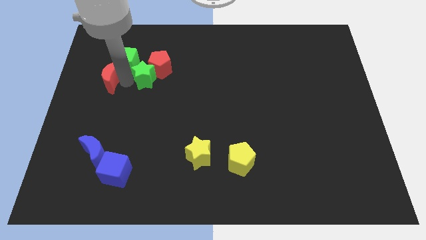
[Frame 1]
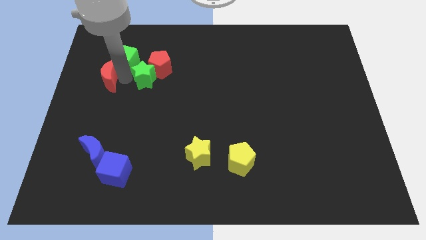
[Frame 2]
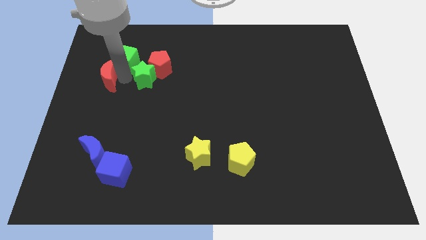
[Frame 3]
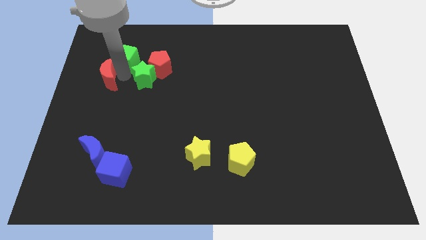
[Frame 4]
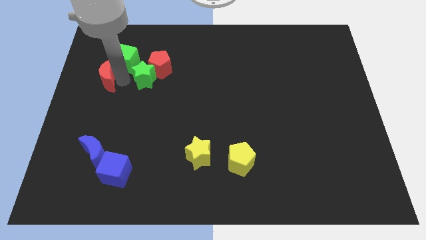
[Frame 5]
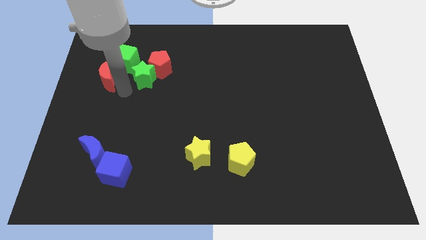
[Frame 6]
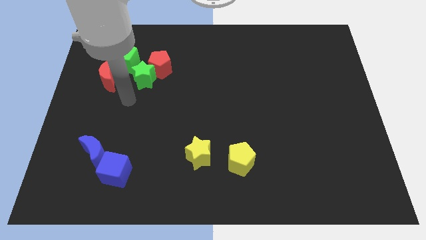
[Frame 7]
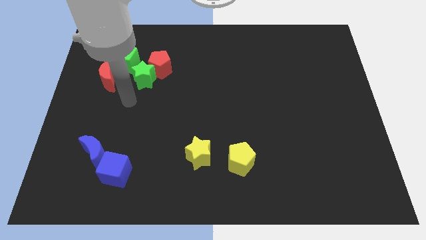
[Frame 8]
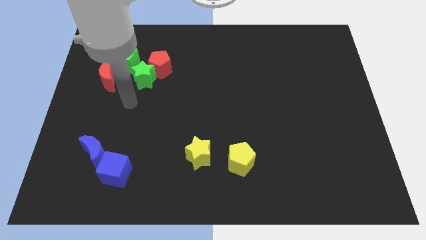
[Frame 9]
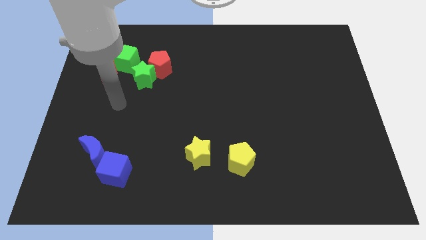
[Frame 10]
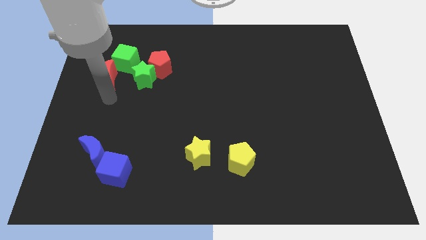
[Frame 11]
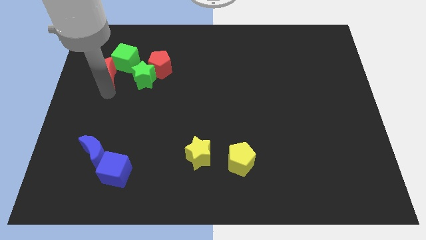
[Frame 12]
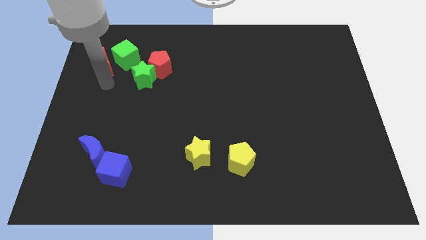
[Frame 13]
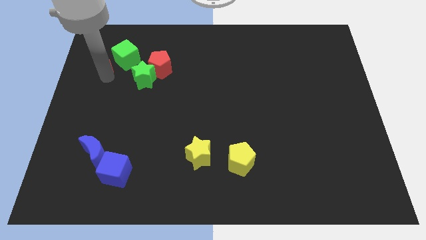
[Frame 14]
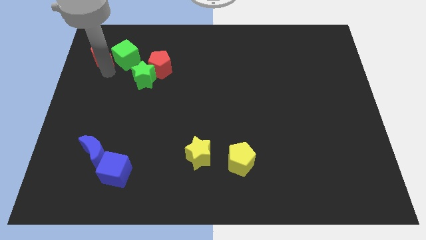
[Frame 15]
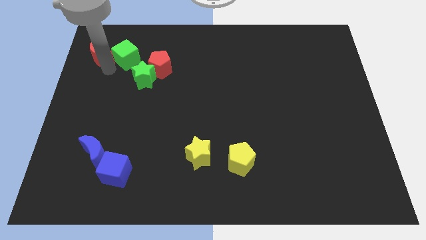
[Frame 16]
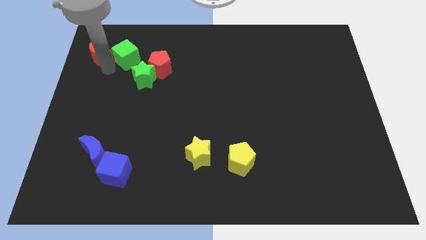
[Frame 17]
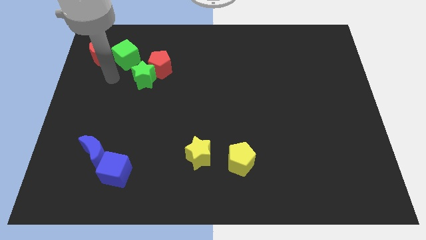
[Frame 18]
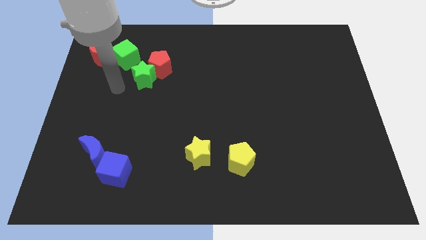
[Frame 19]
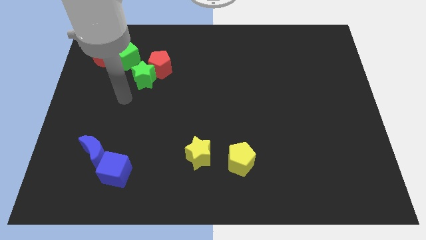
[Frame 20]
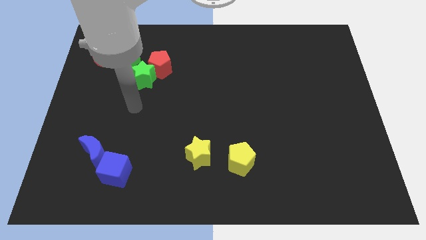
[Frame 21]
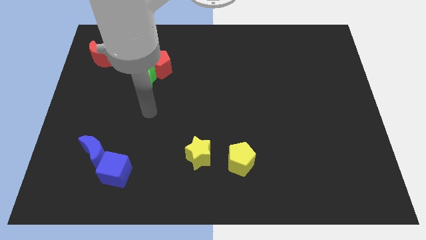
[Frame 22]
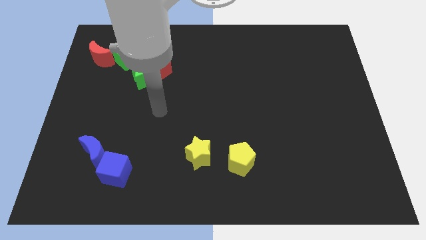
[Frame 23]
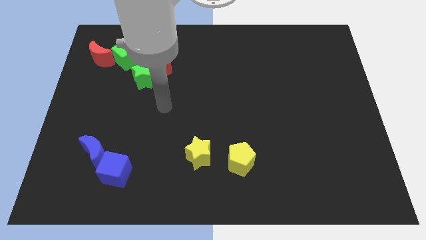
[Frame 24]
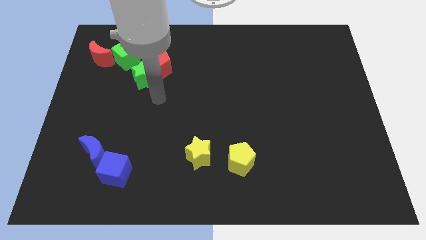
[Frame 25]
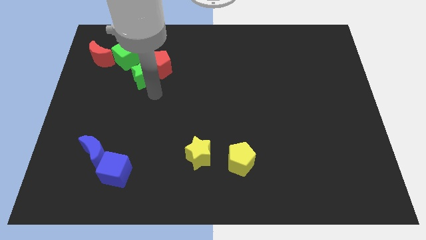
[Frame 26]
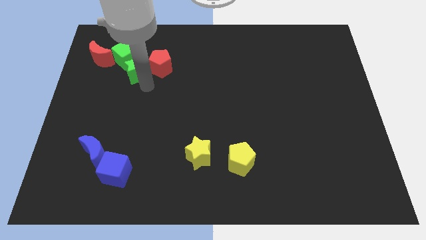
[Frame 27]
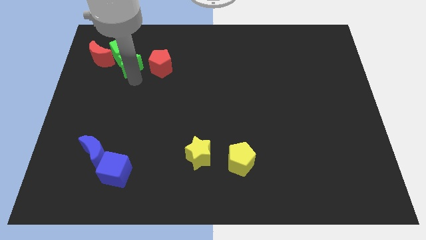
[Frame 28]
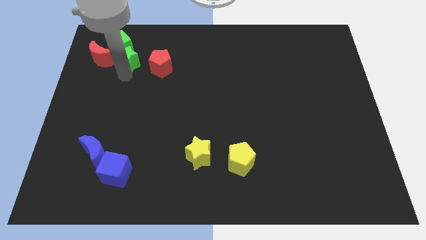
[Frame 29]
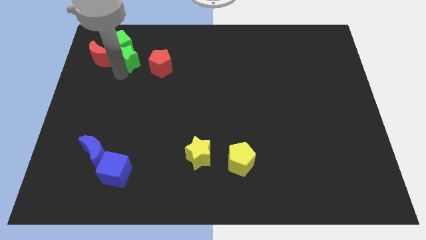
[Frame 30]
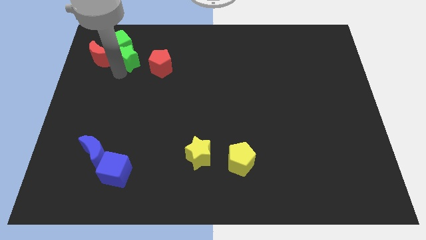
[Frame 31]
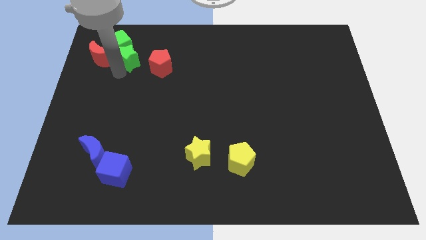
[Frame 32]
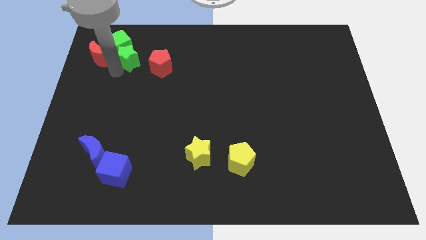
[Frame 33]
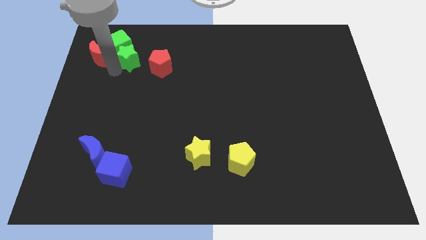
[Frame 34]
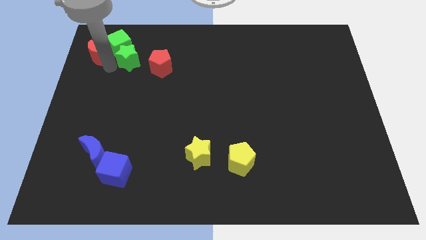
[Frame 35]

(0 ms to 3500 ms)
move the red moon and group of green blocks towards the top left corner of the board

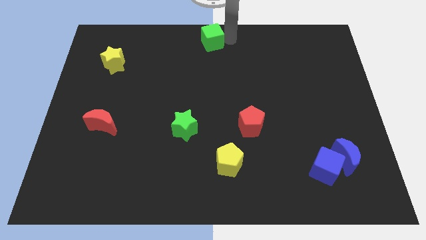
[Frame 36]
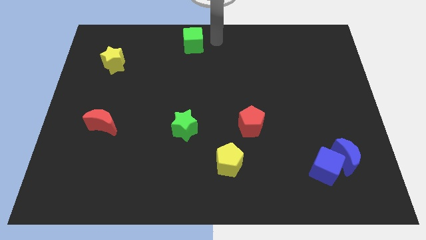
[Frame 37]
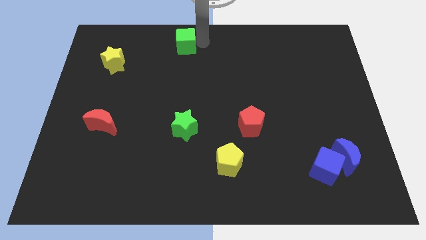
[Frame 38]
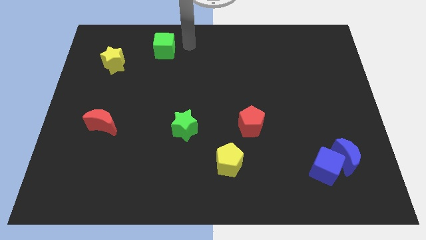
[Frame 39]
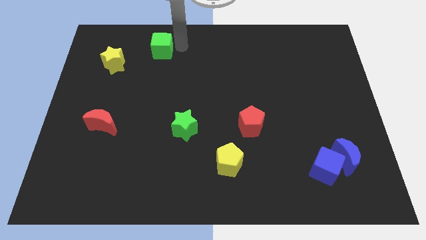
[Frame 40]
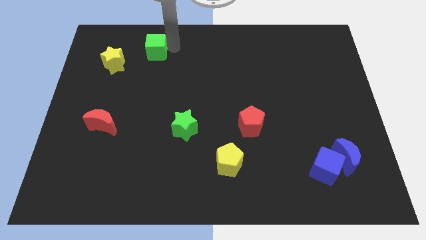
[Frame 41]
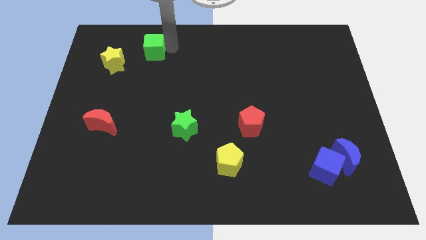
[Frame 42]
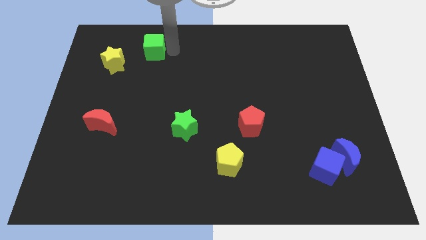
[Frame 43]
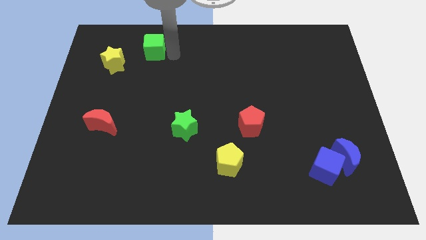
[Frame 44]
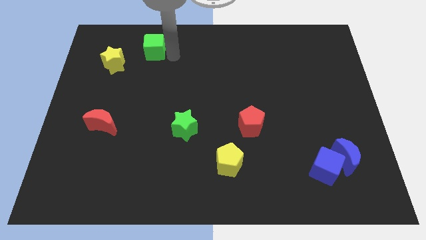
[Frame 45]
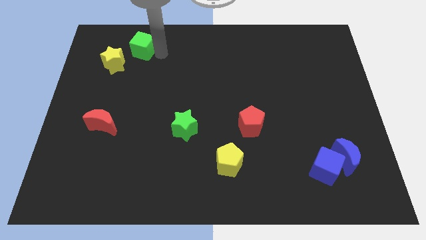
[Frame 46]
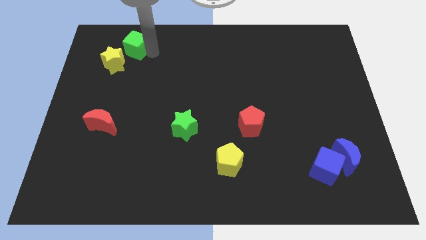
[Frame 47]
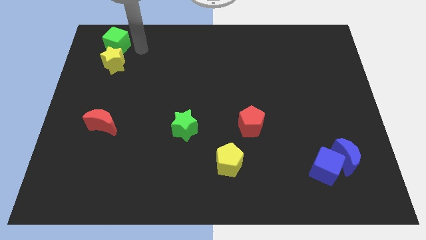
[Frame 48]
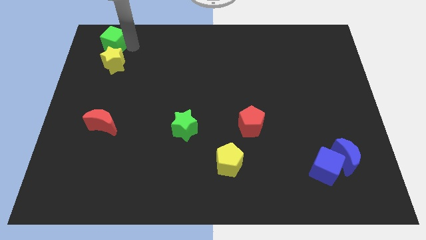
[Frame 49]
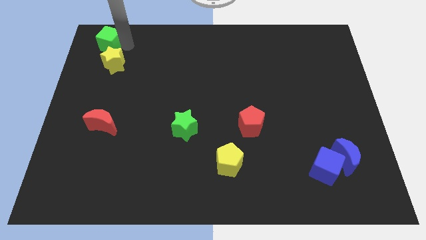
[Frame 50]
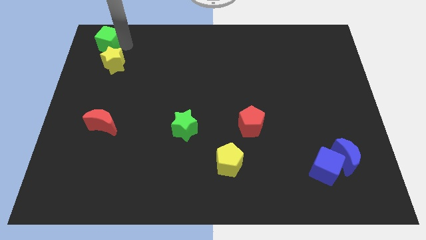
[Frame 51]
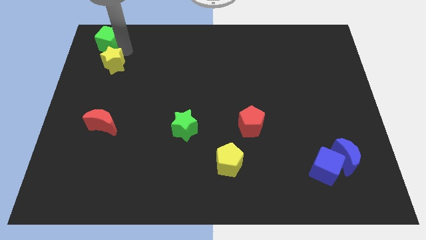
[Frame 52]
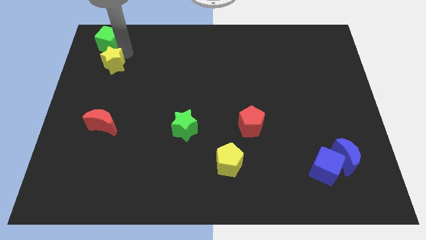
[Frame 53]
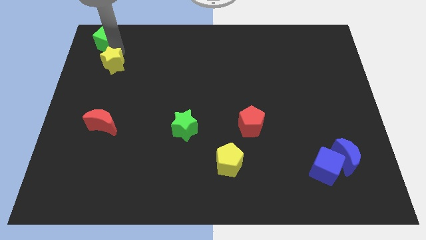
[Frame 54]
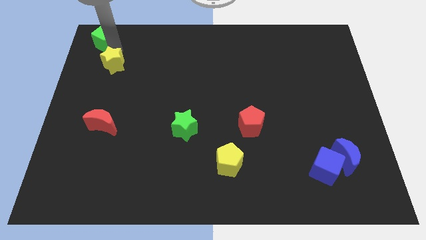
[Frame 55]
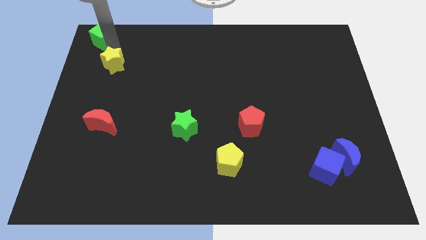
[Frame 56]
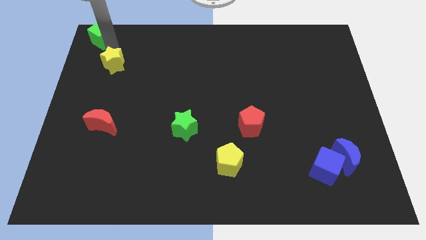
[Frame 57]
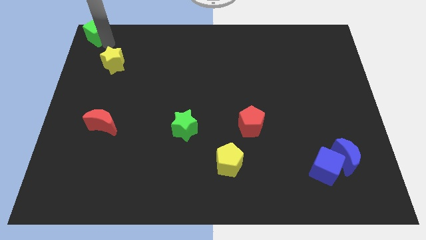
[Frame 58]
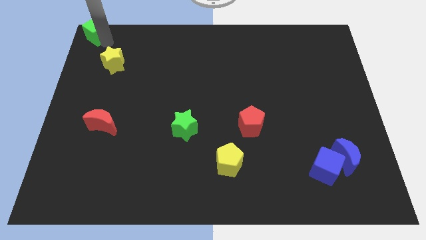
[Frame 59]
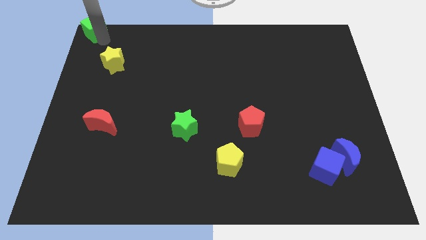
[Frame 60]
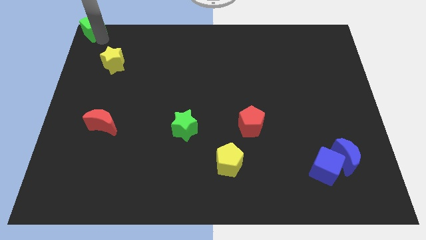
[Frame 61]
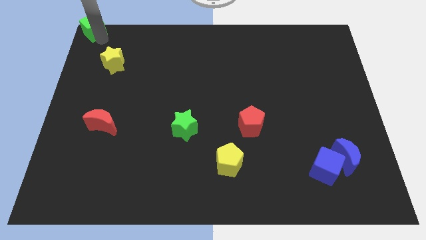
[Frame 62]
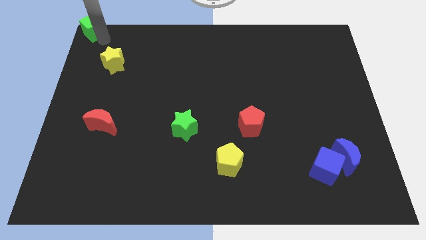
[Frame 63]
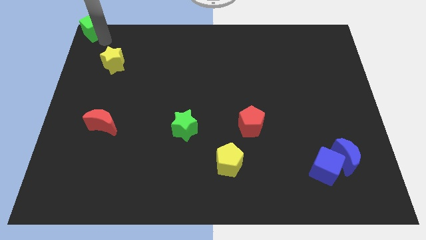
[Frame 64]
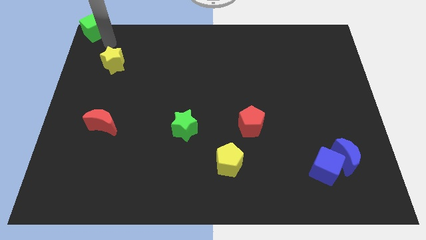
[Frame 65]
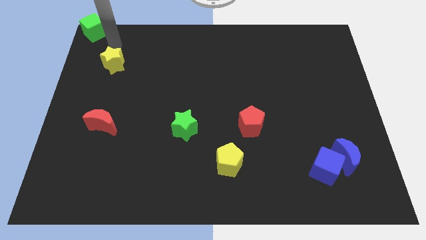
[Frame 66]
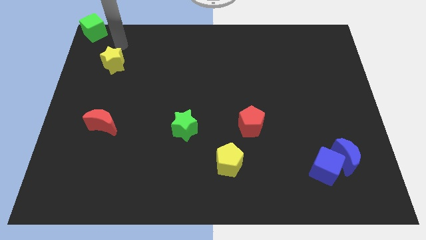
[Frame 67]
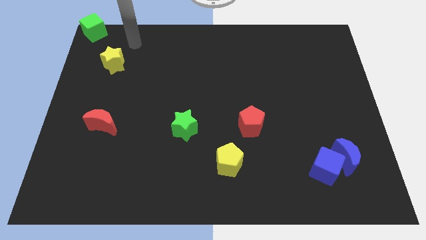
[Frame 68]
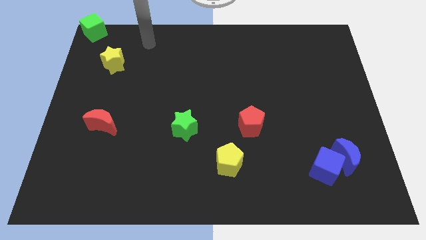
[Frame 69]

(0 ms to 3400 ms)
put the green cube at the top left corner of the board

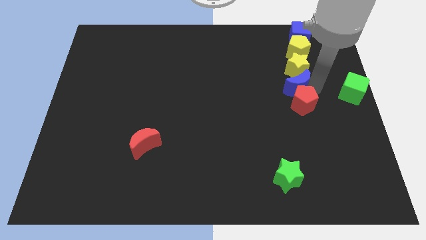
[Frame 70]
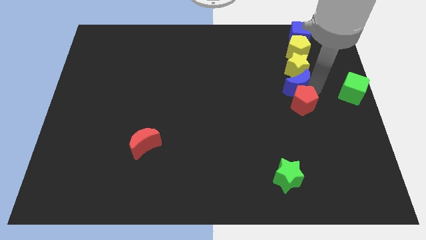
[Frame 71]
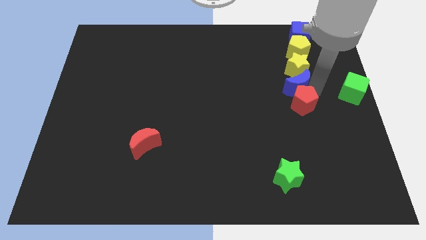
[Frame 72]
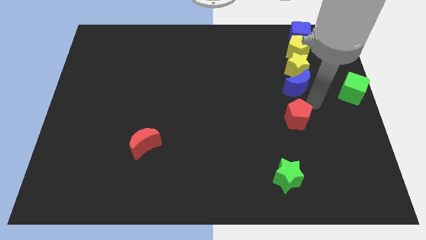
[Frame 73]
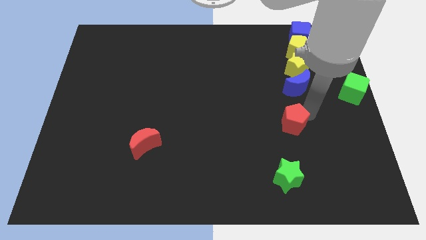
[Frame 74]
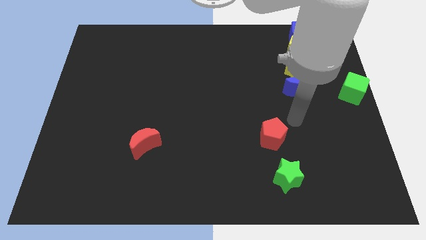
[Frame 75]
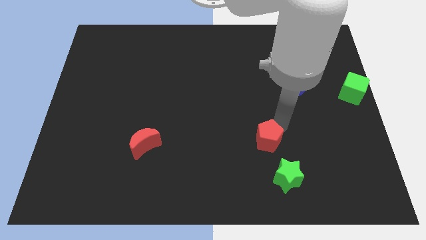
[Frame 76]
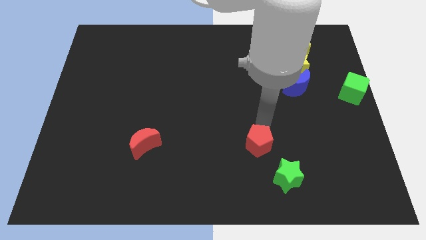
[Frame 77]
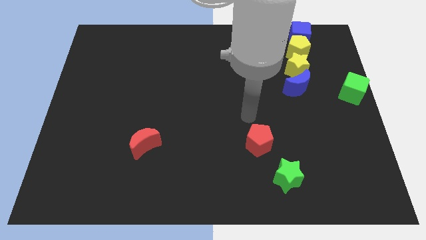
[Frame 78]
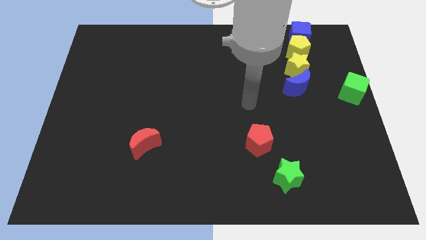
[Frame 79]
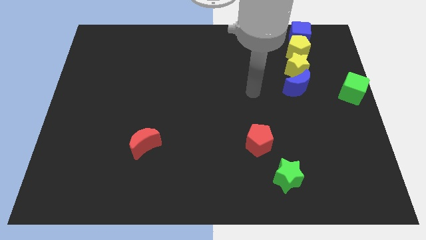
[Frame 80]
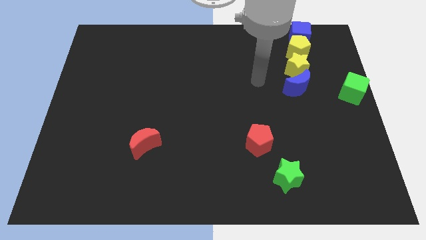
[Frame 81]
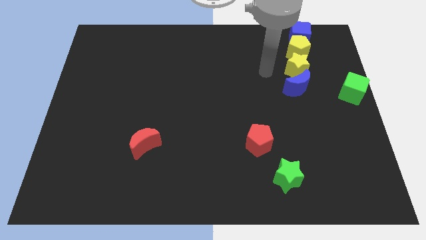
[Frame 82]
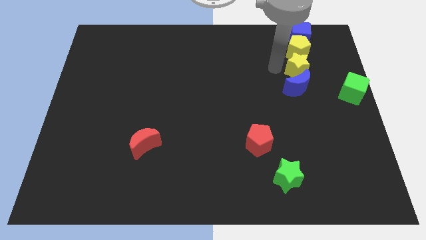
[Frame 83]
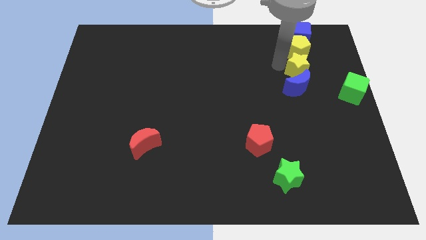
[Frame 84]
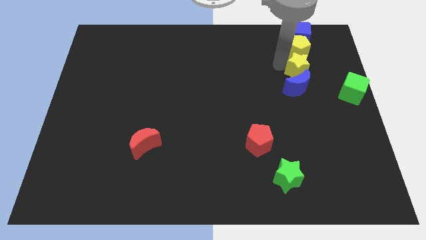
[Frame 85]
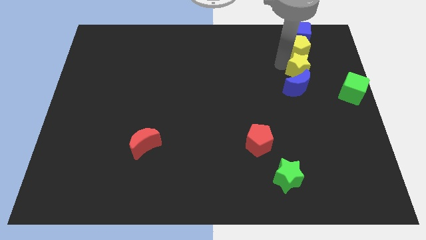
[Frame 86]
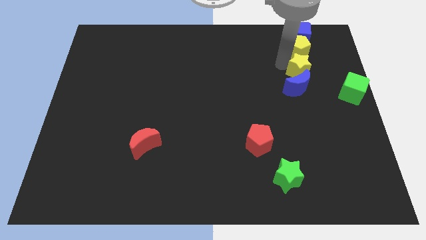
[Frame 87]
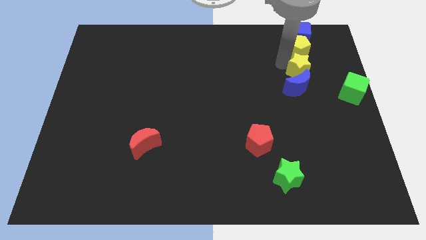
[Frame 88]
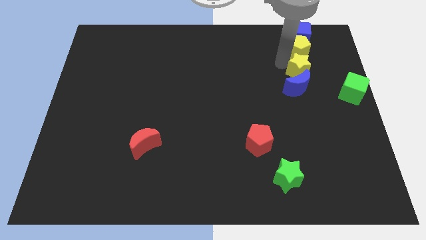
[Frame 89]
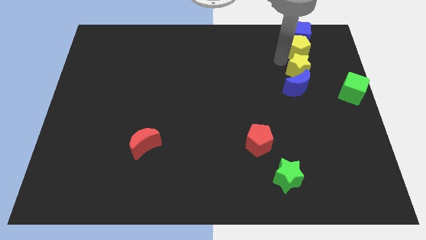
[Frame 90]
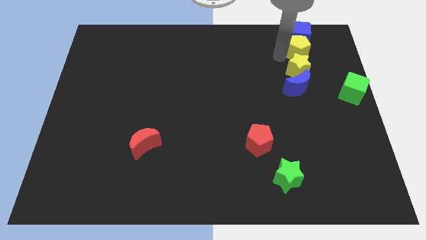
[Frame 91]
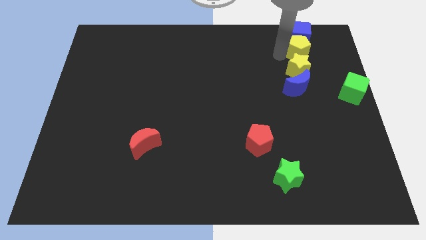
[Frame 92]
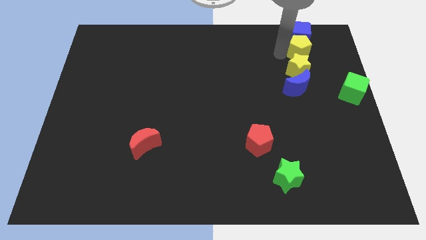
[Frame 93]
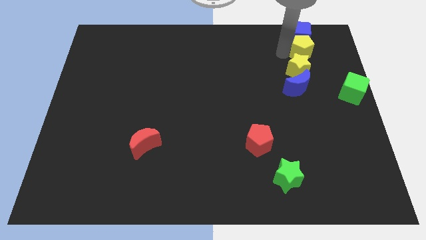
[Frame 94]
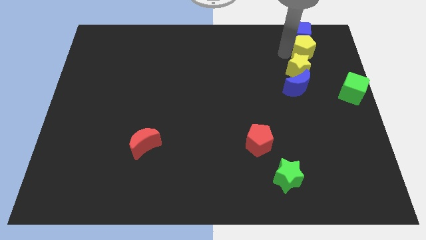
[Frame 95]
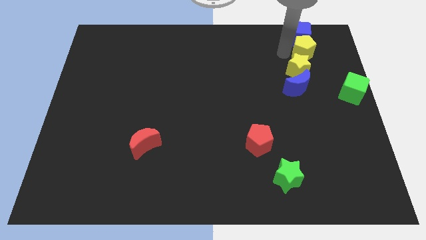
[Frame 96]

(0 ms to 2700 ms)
move the blue crescent away from the red pentagon
